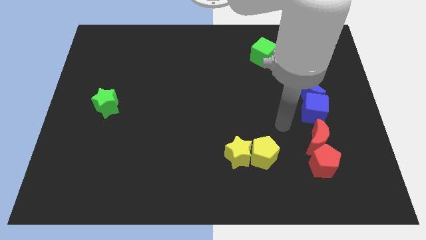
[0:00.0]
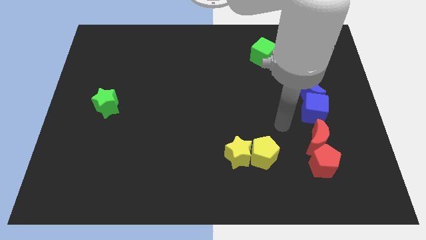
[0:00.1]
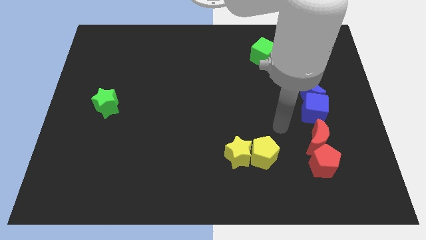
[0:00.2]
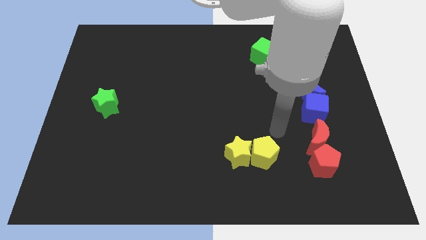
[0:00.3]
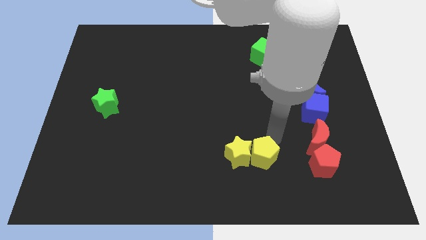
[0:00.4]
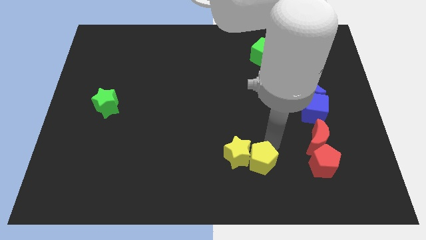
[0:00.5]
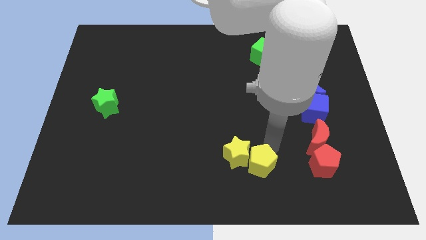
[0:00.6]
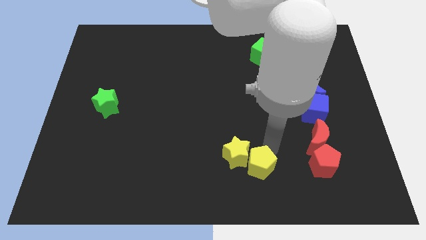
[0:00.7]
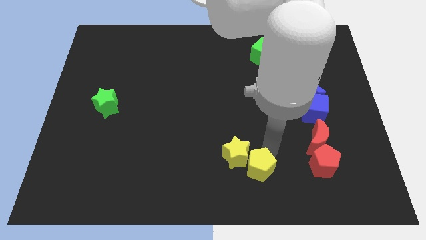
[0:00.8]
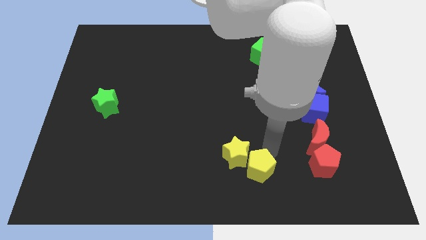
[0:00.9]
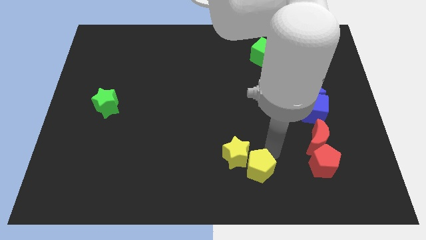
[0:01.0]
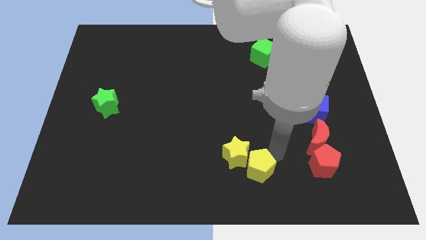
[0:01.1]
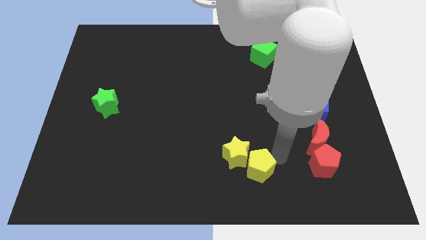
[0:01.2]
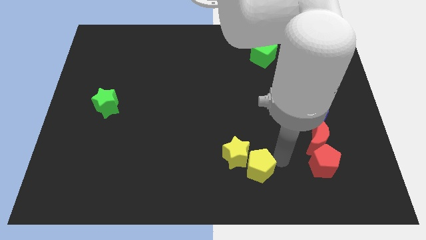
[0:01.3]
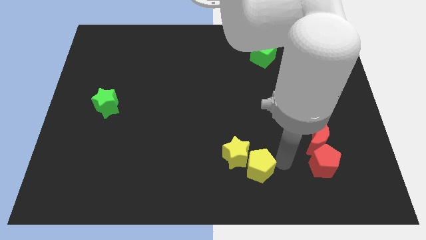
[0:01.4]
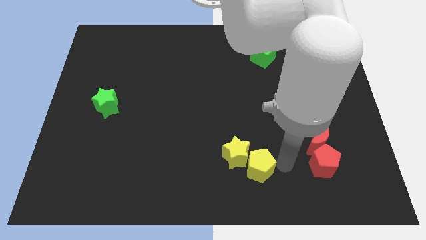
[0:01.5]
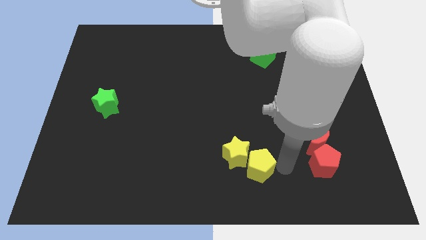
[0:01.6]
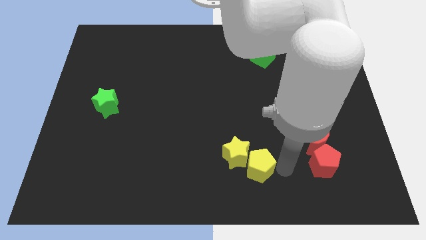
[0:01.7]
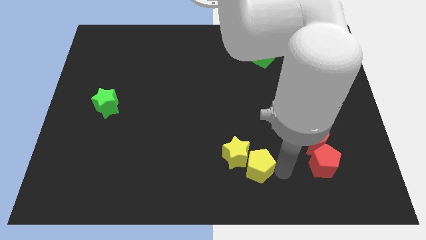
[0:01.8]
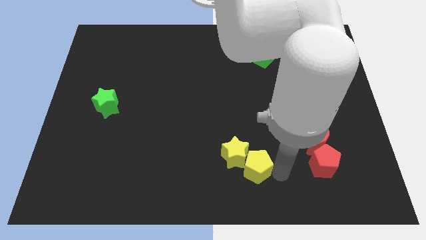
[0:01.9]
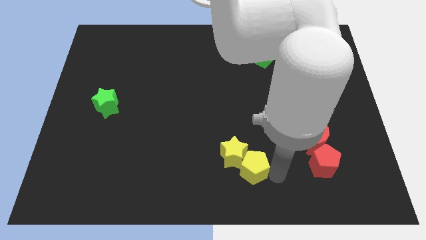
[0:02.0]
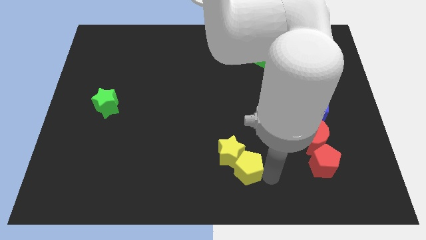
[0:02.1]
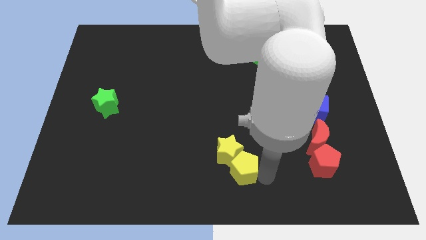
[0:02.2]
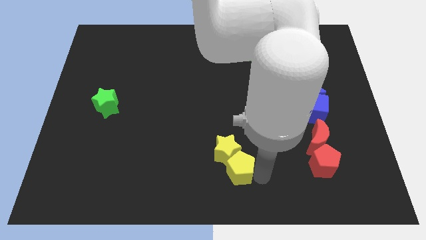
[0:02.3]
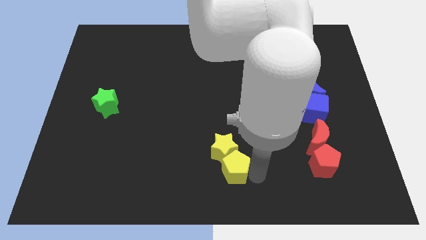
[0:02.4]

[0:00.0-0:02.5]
move the yellow pentagon and yellow star to the left side of the board

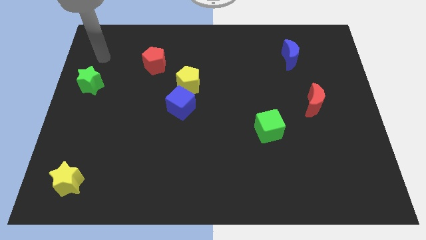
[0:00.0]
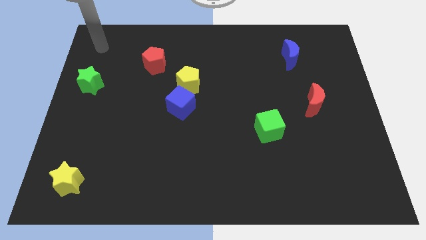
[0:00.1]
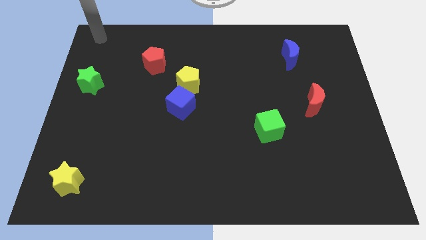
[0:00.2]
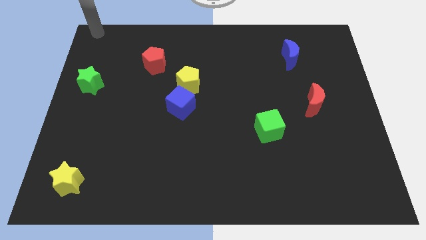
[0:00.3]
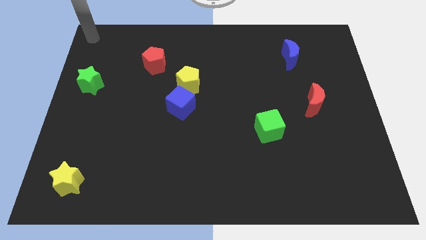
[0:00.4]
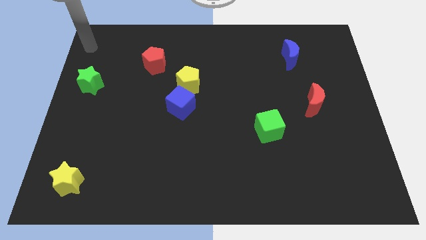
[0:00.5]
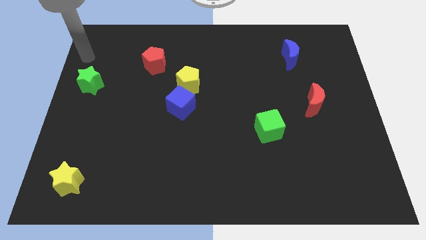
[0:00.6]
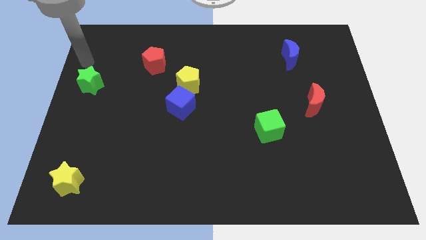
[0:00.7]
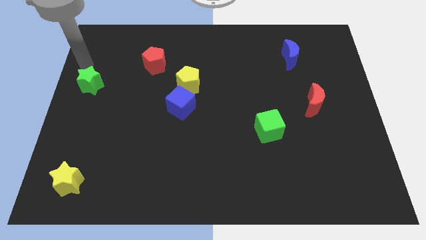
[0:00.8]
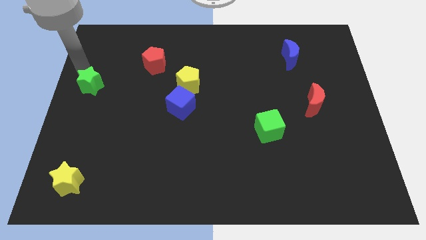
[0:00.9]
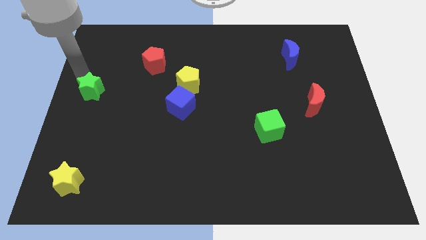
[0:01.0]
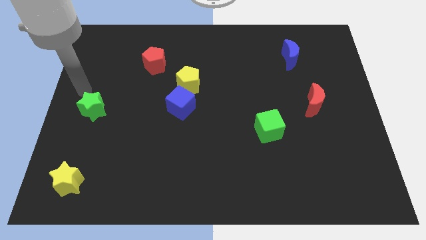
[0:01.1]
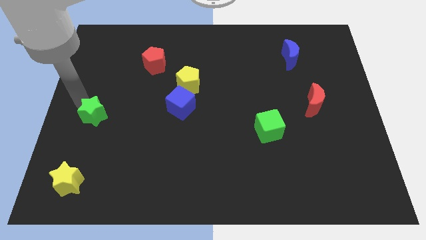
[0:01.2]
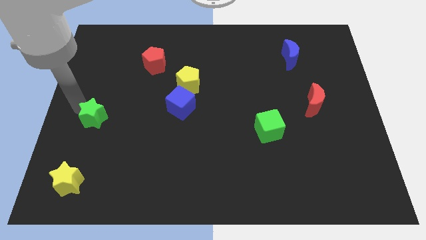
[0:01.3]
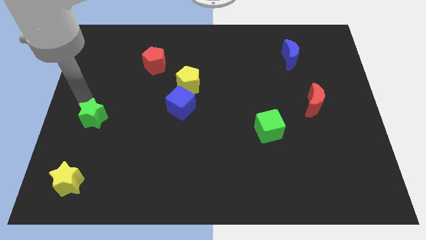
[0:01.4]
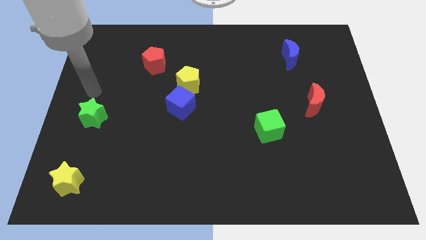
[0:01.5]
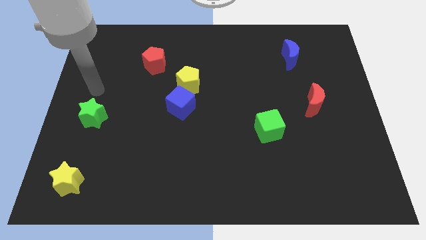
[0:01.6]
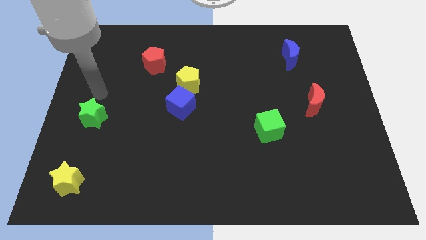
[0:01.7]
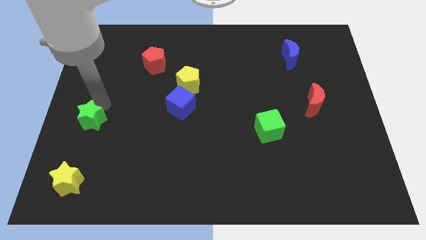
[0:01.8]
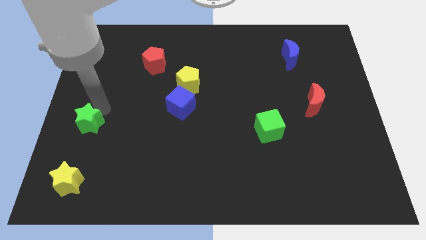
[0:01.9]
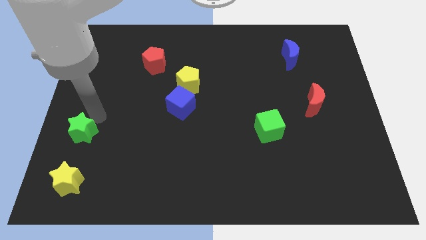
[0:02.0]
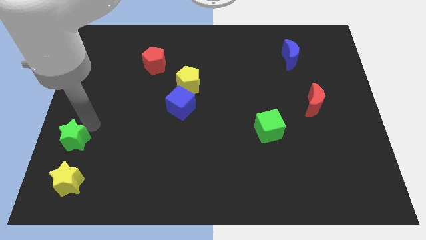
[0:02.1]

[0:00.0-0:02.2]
move green star on top of yellow star

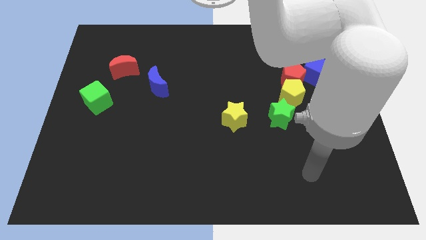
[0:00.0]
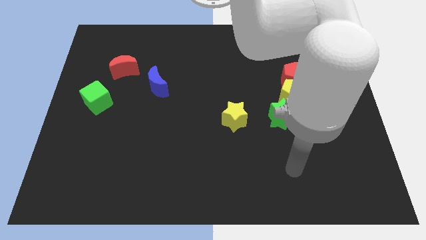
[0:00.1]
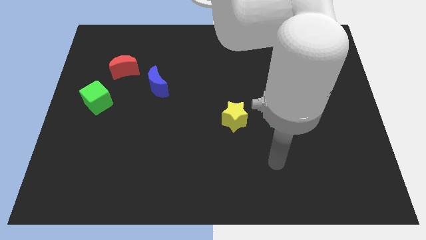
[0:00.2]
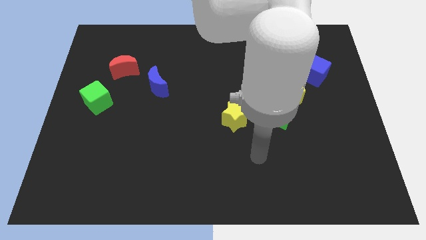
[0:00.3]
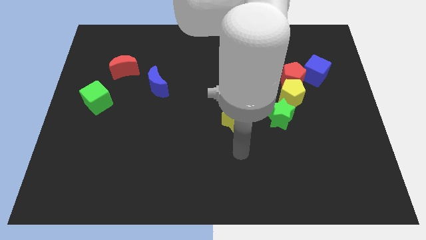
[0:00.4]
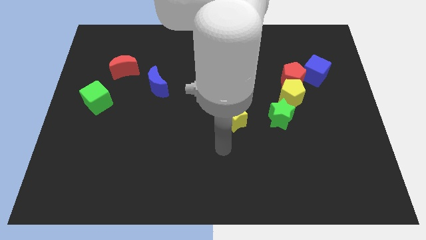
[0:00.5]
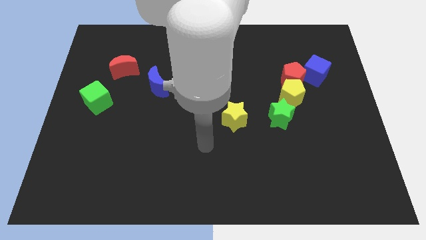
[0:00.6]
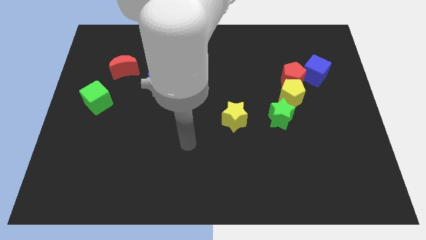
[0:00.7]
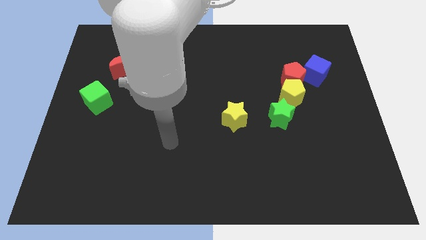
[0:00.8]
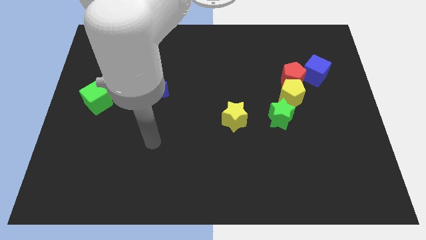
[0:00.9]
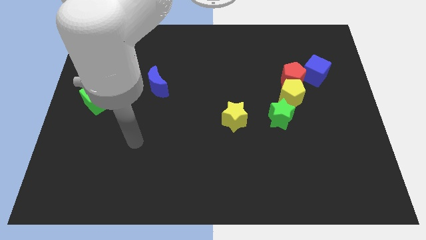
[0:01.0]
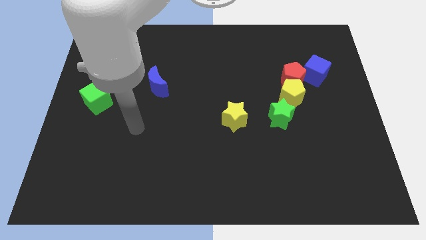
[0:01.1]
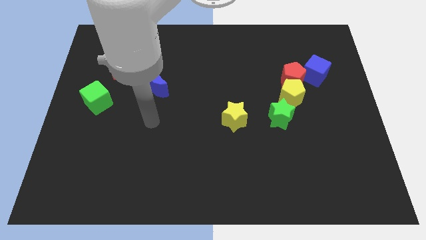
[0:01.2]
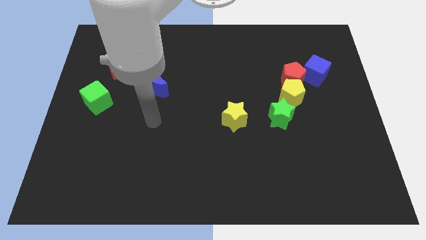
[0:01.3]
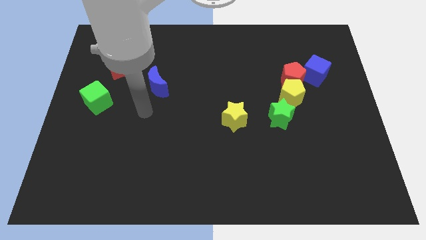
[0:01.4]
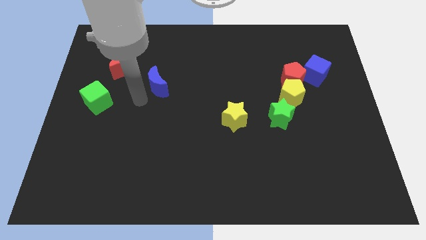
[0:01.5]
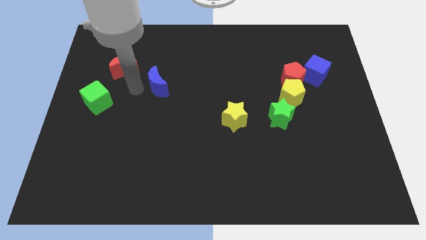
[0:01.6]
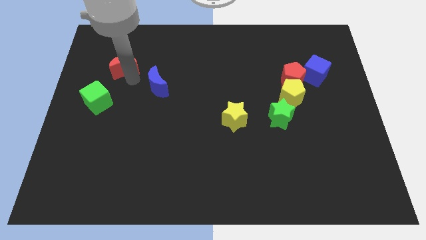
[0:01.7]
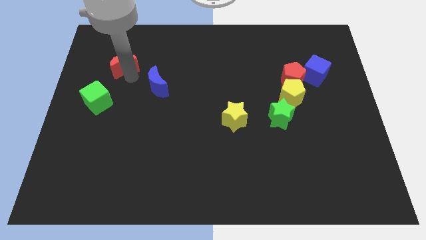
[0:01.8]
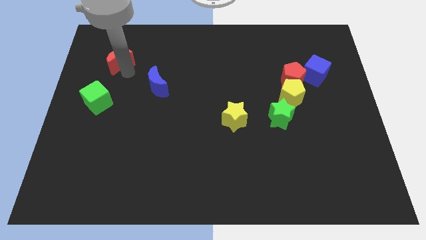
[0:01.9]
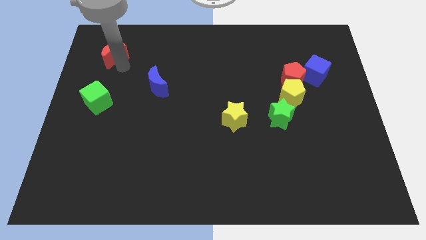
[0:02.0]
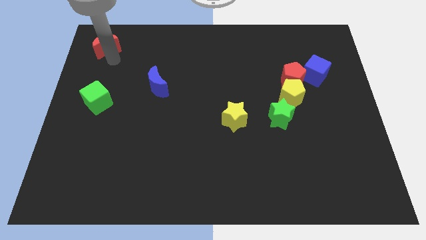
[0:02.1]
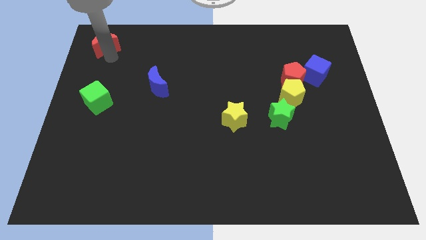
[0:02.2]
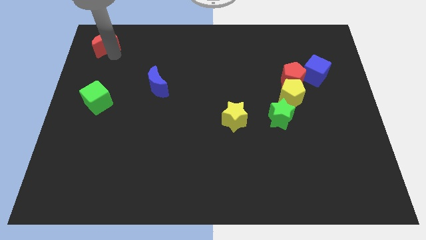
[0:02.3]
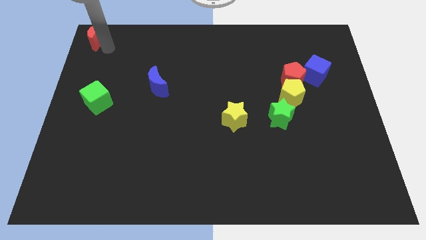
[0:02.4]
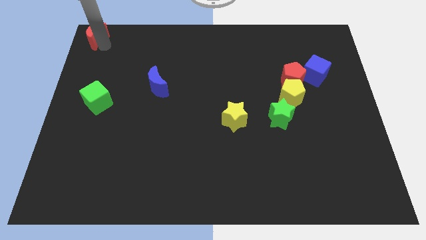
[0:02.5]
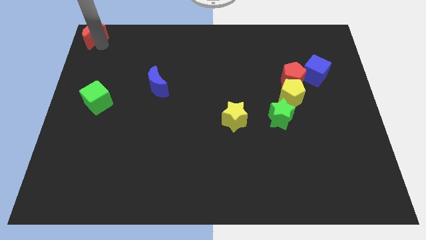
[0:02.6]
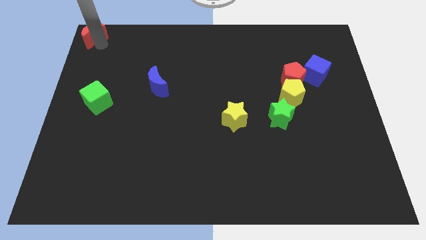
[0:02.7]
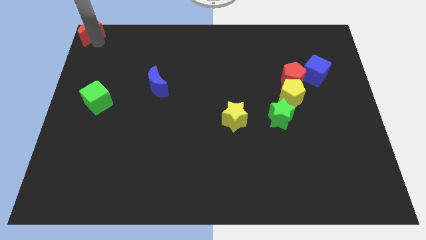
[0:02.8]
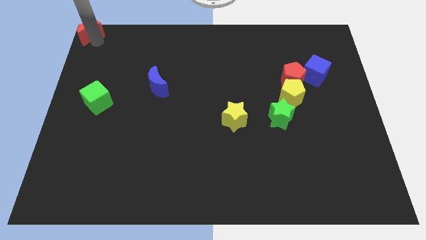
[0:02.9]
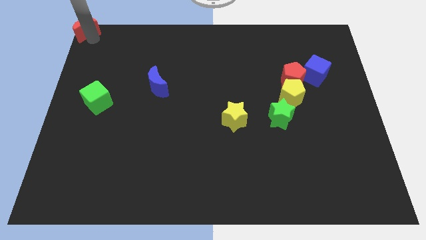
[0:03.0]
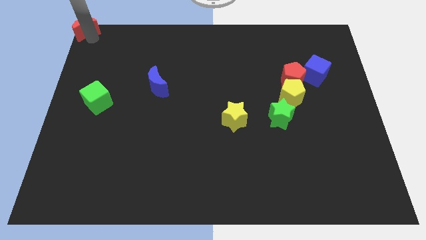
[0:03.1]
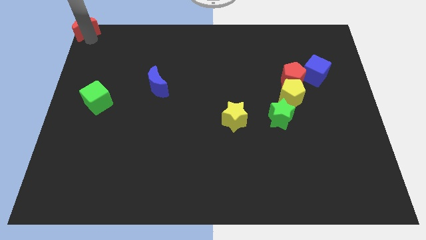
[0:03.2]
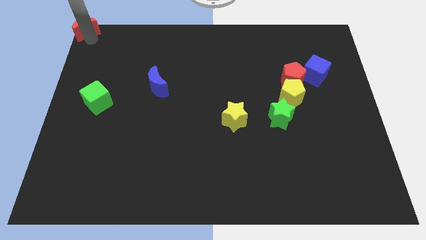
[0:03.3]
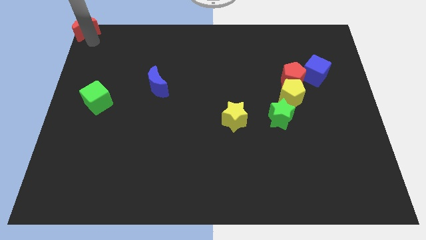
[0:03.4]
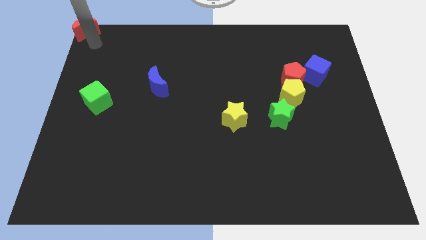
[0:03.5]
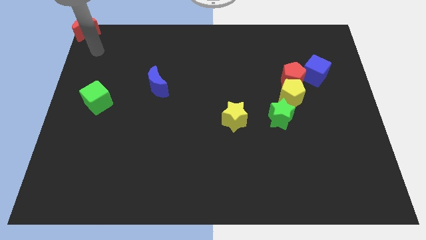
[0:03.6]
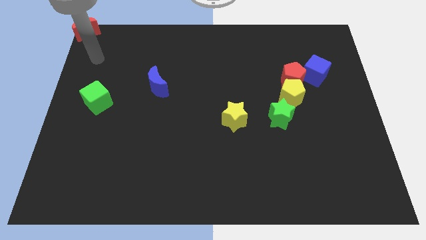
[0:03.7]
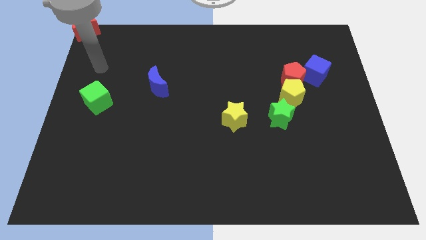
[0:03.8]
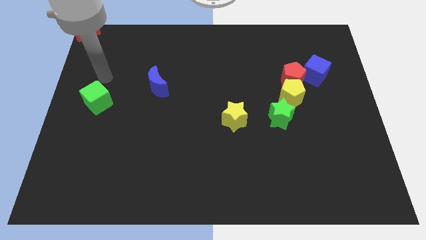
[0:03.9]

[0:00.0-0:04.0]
move the red crescent to the top left of the board

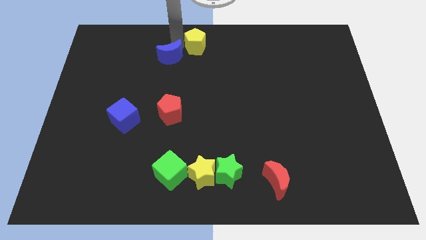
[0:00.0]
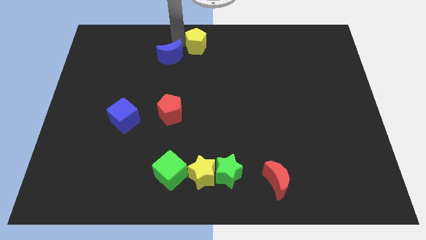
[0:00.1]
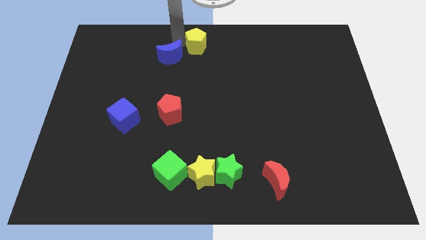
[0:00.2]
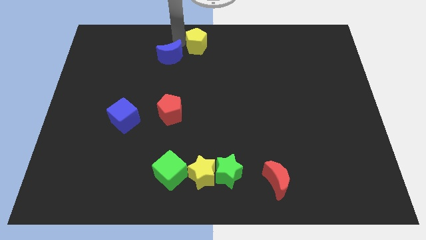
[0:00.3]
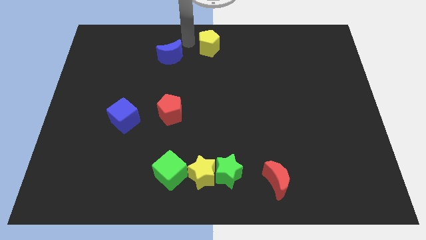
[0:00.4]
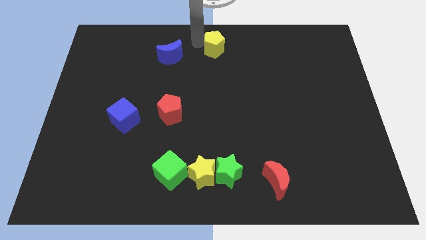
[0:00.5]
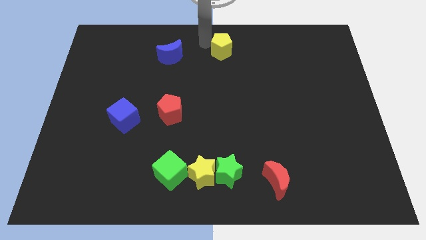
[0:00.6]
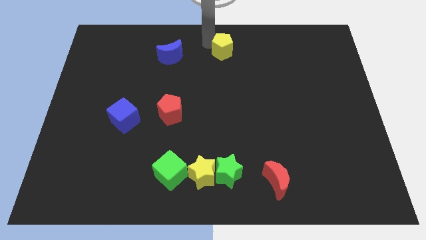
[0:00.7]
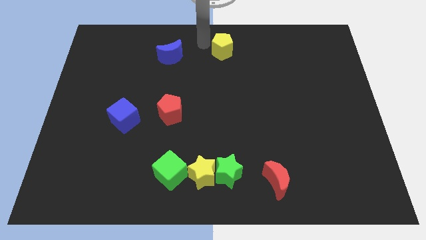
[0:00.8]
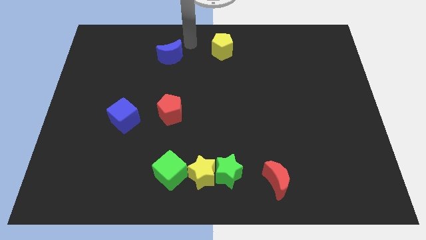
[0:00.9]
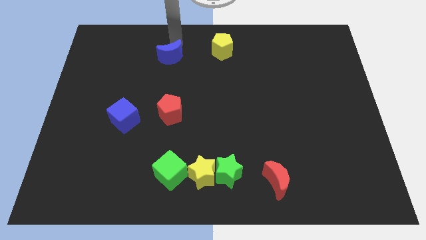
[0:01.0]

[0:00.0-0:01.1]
slide the yellow pentagon slightly to the right
